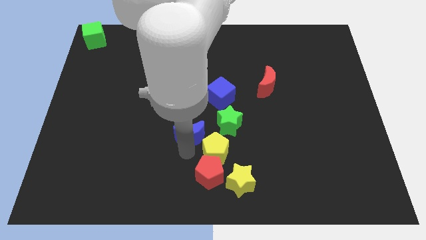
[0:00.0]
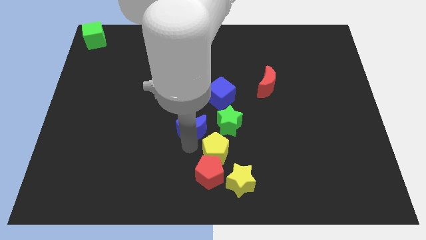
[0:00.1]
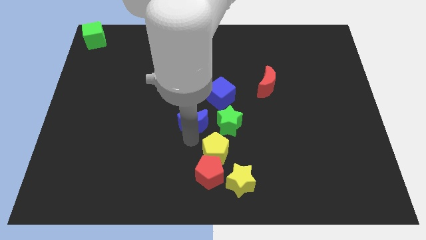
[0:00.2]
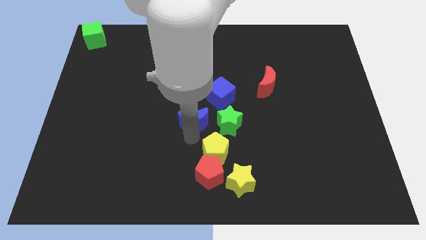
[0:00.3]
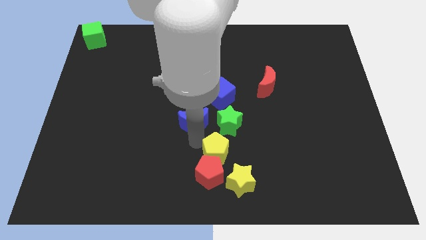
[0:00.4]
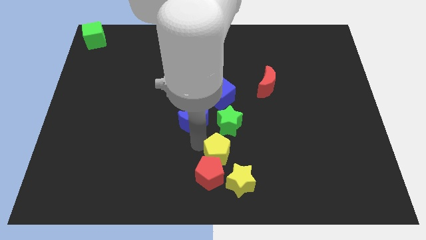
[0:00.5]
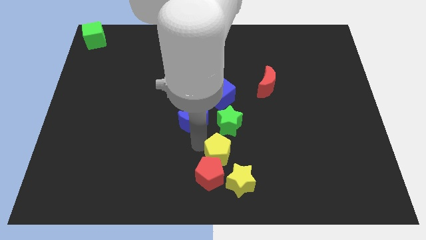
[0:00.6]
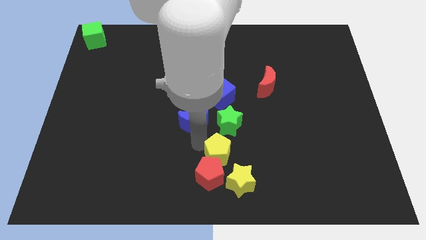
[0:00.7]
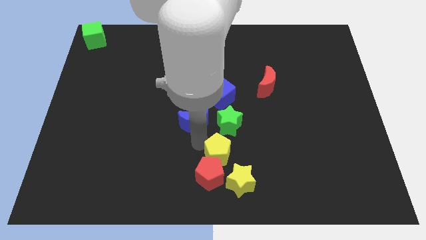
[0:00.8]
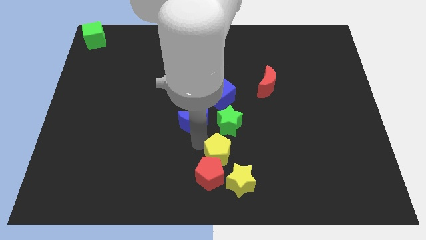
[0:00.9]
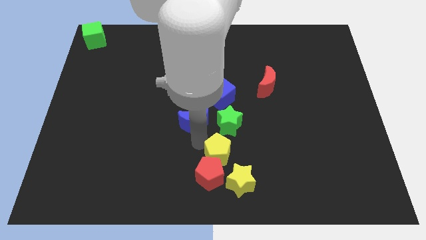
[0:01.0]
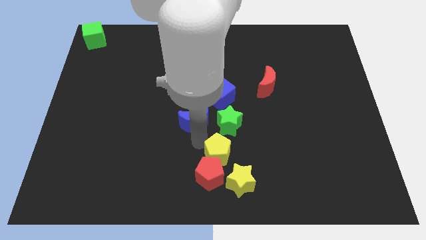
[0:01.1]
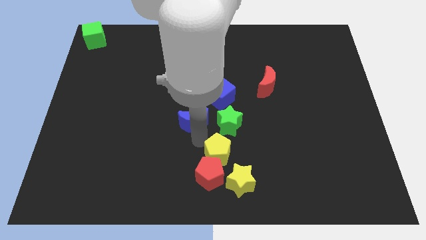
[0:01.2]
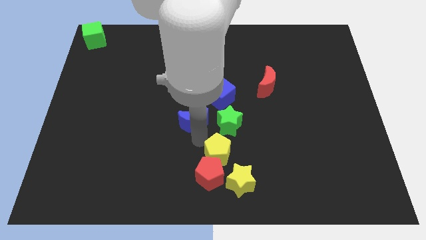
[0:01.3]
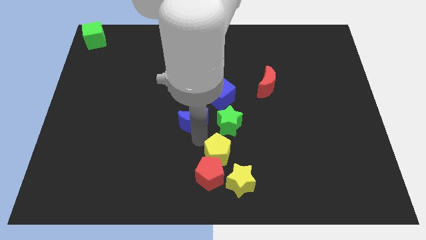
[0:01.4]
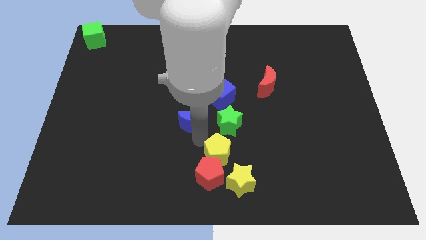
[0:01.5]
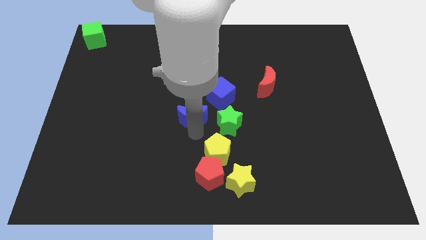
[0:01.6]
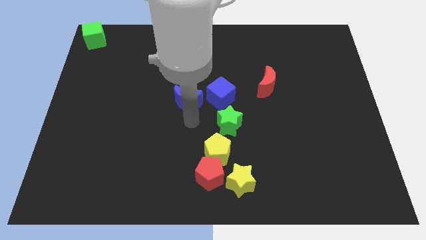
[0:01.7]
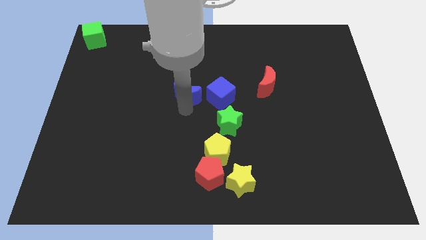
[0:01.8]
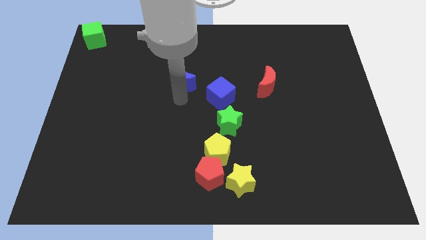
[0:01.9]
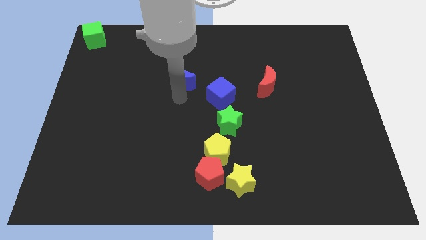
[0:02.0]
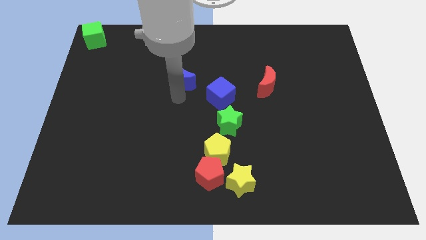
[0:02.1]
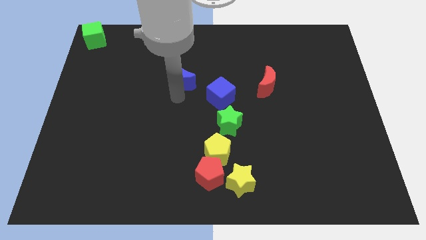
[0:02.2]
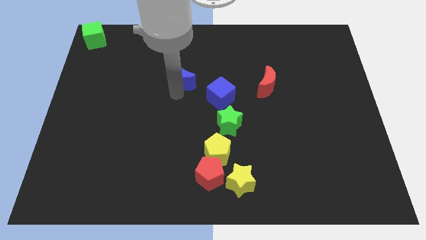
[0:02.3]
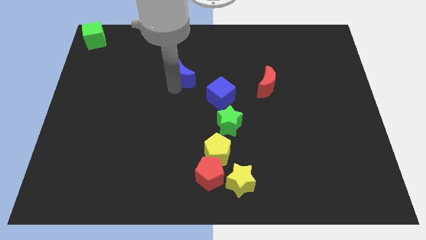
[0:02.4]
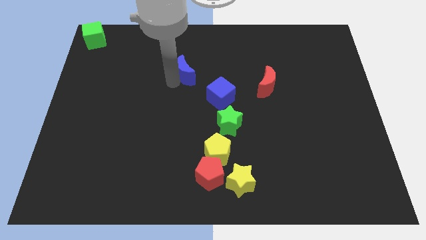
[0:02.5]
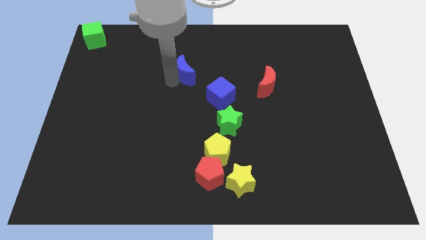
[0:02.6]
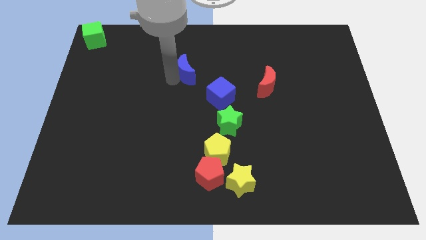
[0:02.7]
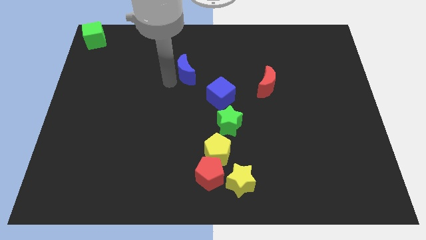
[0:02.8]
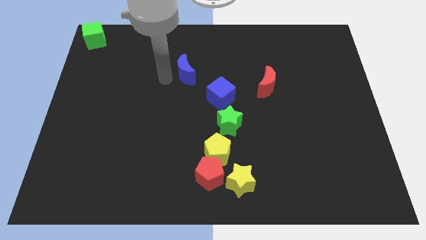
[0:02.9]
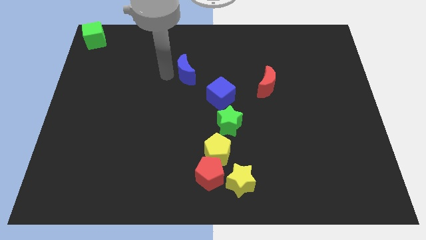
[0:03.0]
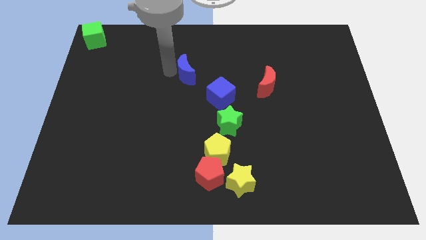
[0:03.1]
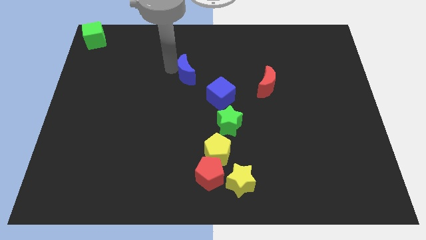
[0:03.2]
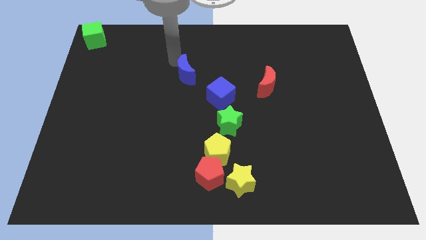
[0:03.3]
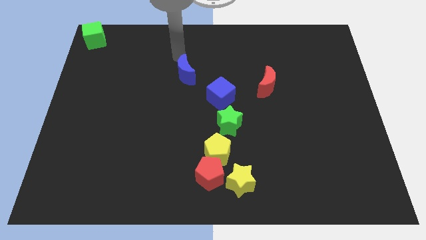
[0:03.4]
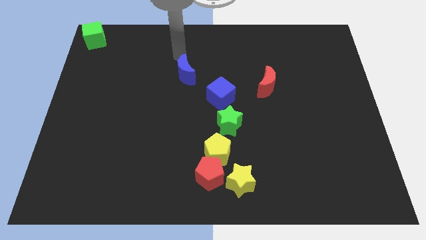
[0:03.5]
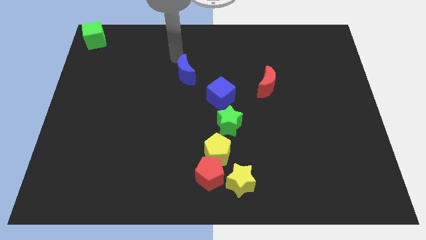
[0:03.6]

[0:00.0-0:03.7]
move the blue moon diagonal left of the blue cube

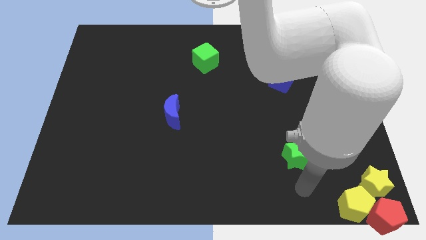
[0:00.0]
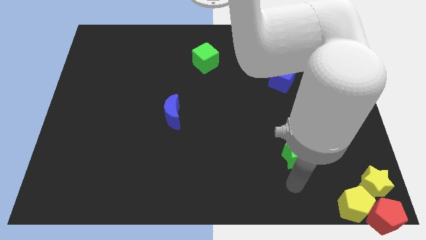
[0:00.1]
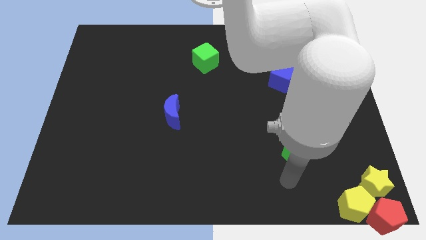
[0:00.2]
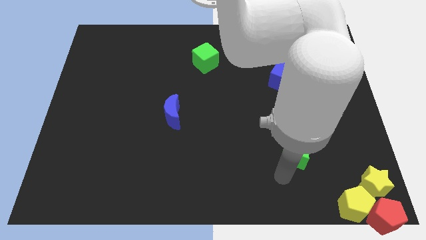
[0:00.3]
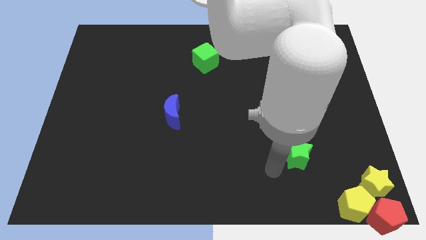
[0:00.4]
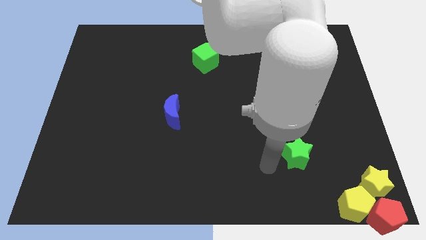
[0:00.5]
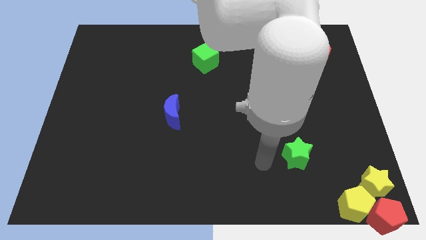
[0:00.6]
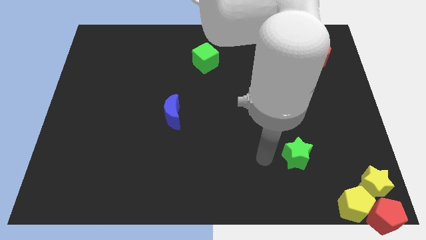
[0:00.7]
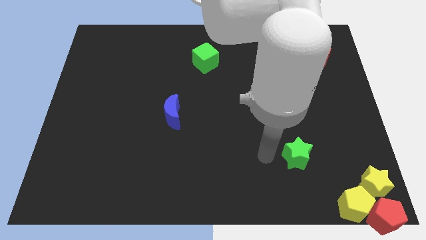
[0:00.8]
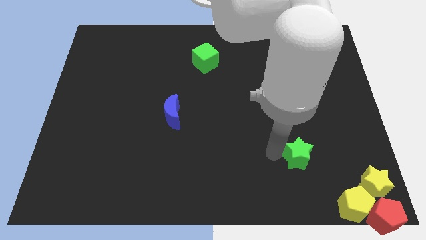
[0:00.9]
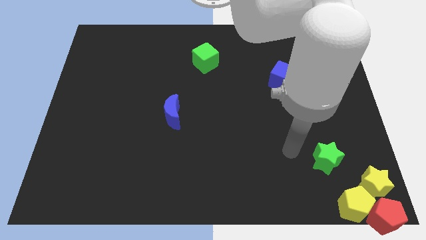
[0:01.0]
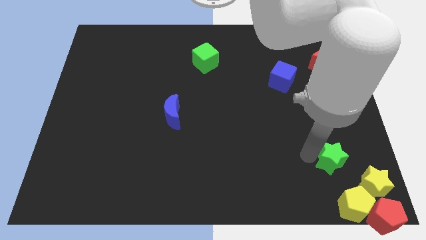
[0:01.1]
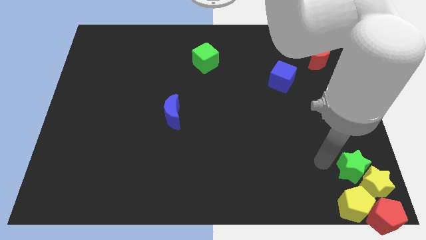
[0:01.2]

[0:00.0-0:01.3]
place the green star at the top left side of yellow star

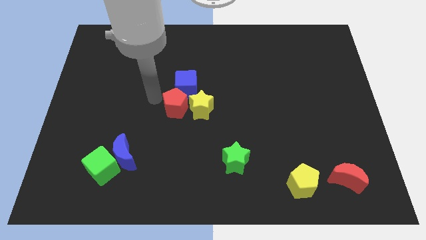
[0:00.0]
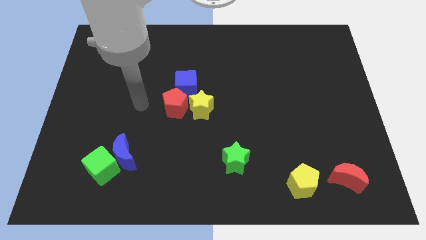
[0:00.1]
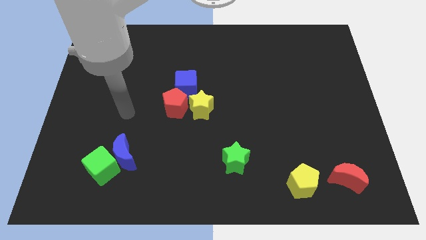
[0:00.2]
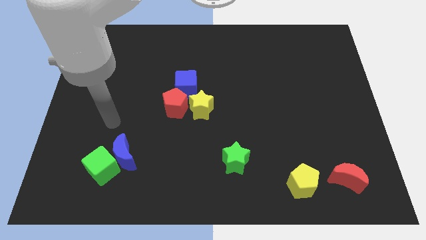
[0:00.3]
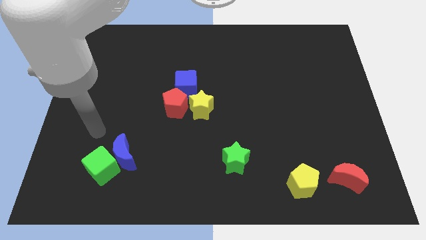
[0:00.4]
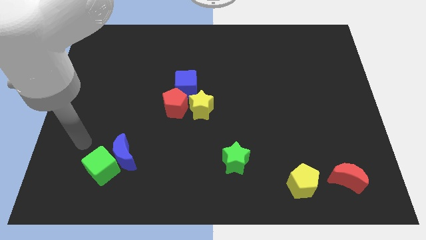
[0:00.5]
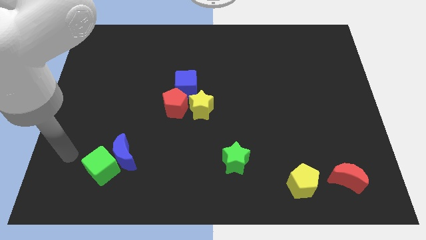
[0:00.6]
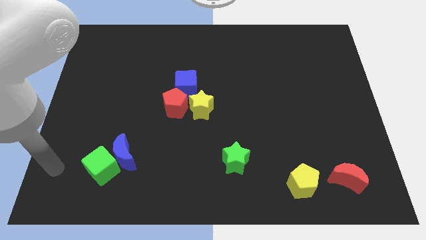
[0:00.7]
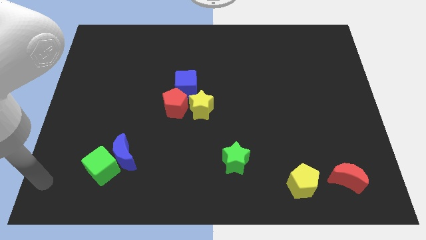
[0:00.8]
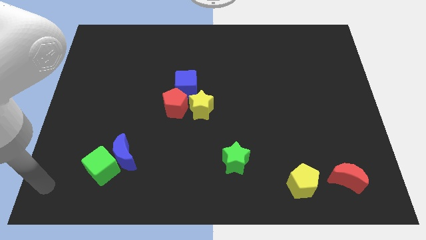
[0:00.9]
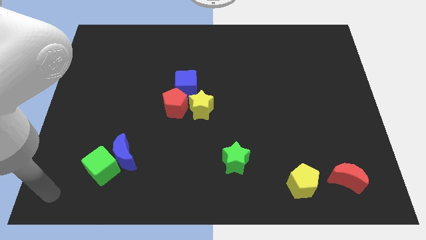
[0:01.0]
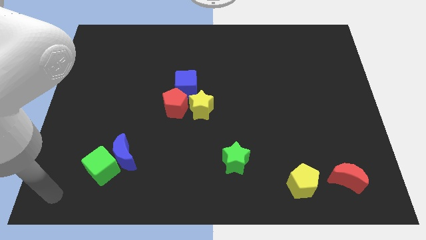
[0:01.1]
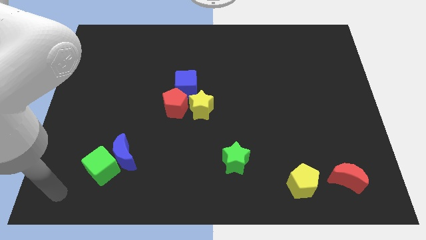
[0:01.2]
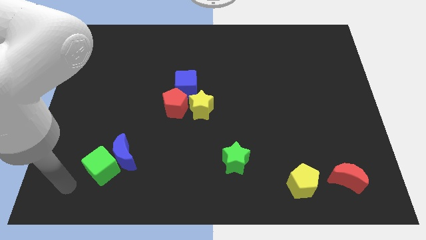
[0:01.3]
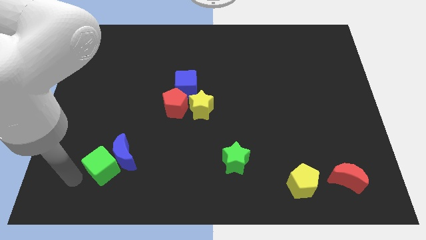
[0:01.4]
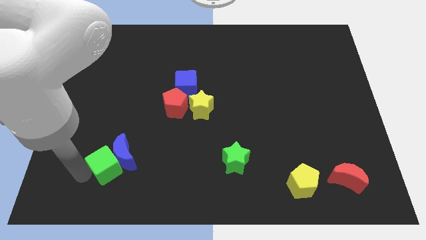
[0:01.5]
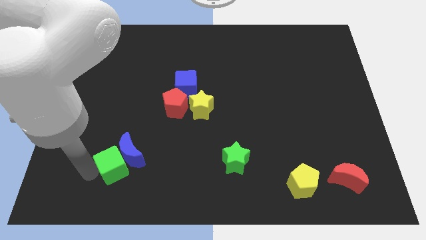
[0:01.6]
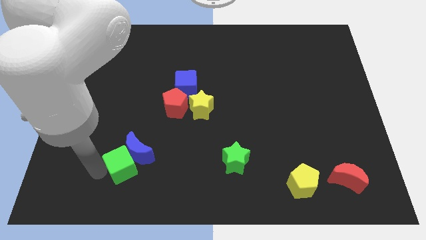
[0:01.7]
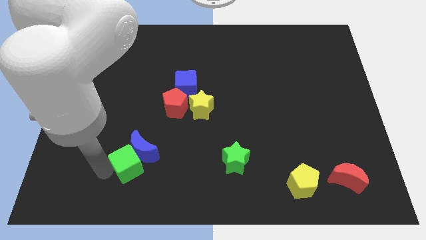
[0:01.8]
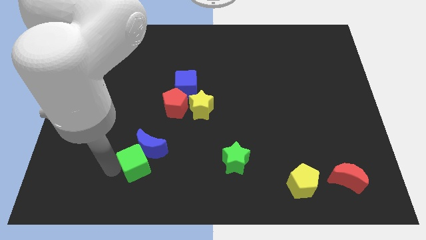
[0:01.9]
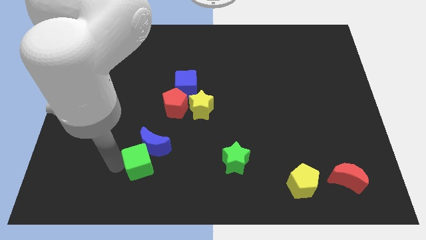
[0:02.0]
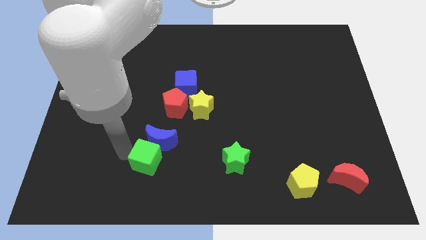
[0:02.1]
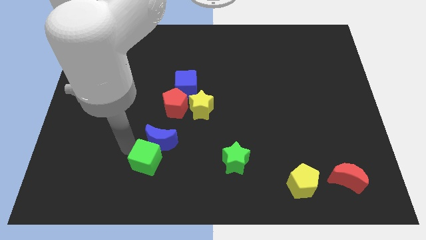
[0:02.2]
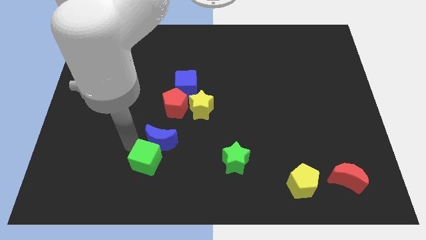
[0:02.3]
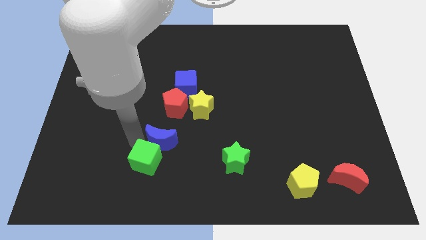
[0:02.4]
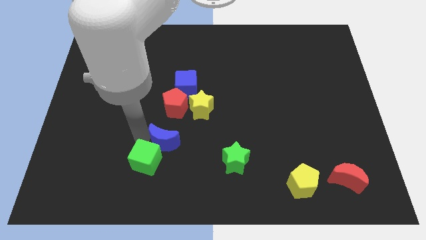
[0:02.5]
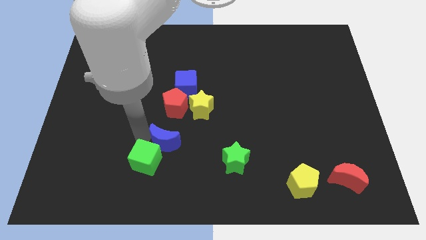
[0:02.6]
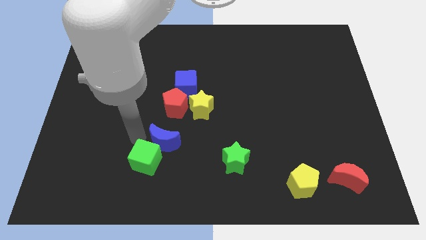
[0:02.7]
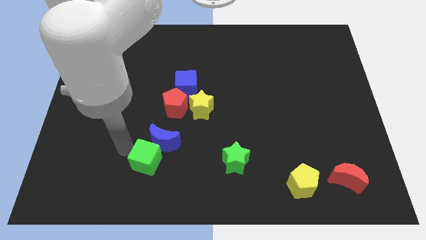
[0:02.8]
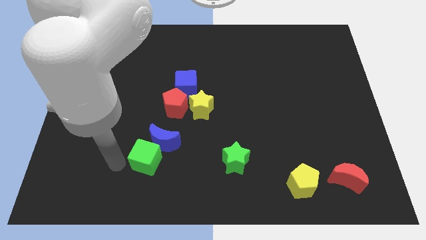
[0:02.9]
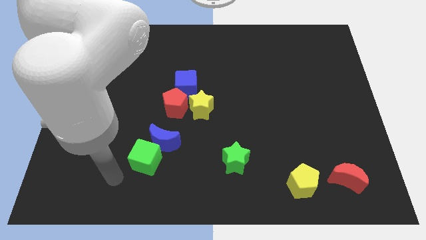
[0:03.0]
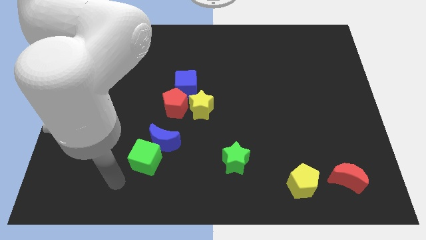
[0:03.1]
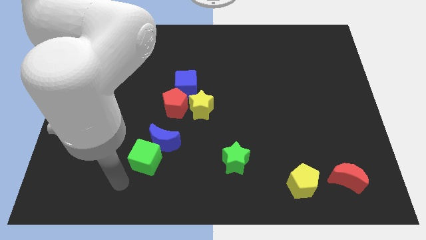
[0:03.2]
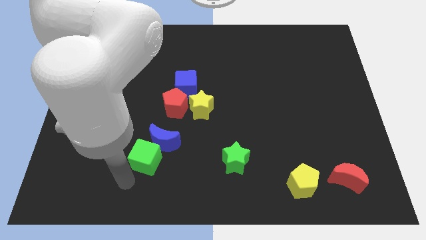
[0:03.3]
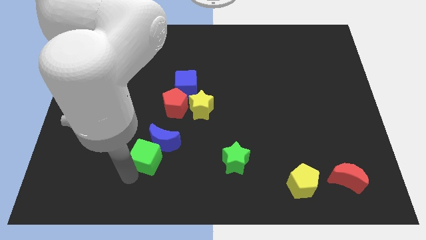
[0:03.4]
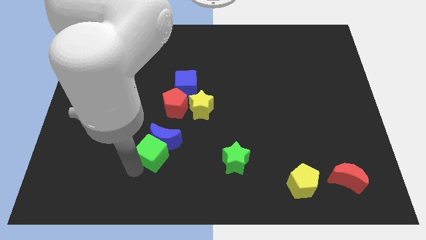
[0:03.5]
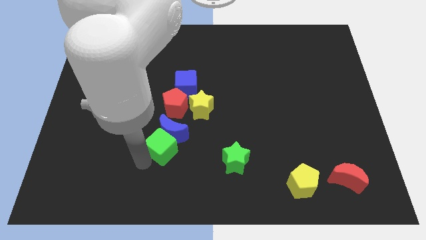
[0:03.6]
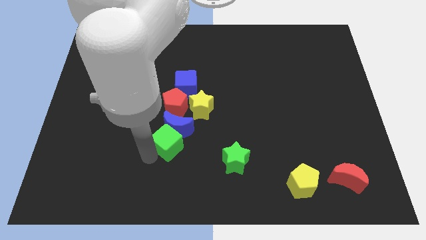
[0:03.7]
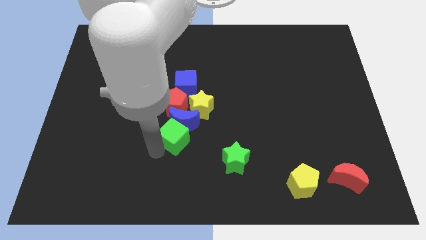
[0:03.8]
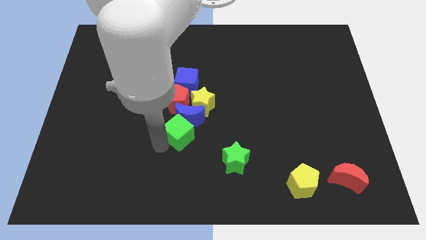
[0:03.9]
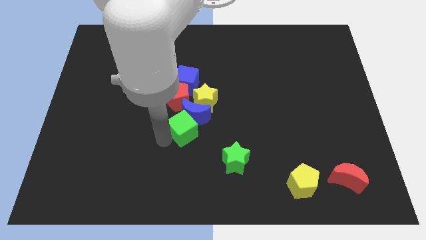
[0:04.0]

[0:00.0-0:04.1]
push the green cube and blue moon towards the group of blocks
